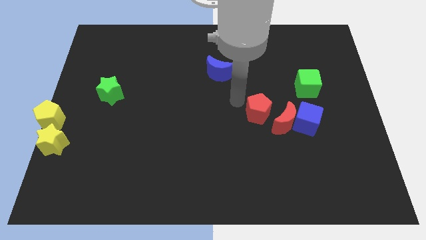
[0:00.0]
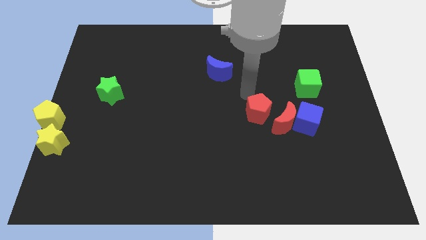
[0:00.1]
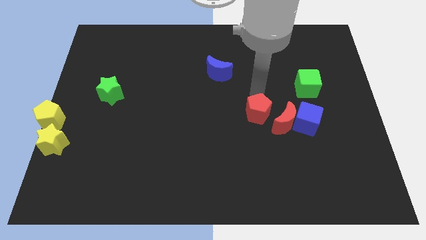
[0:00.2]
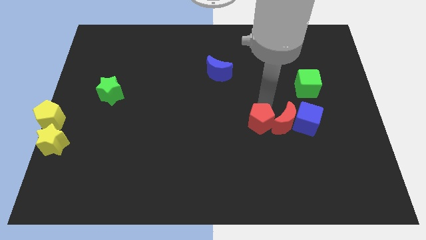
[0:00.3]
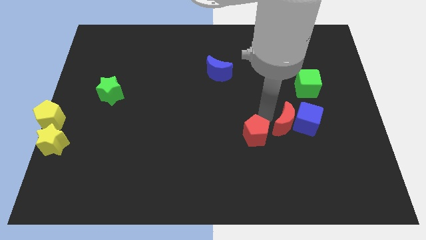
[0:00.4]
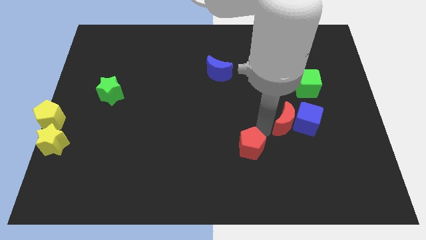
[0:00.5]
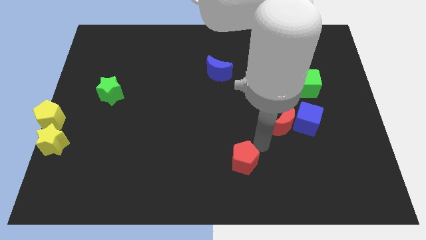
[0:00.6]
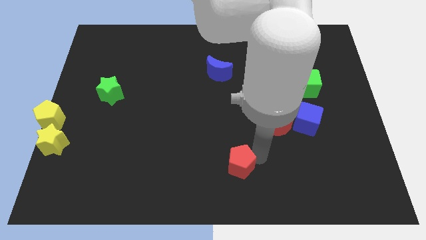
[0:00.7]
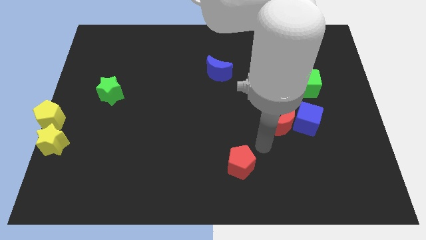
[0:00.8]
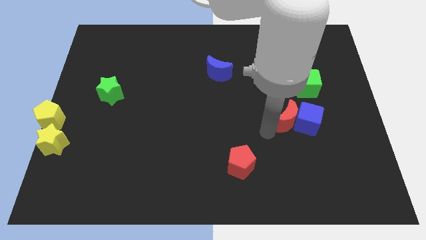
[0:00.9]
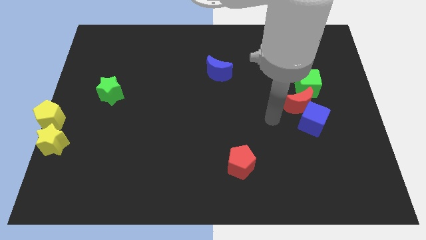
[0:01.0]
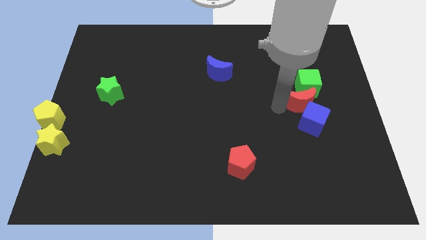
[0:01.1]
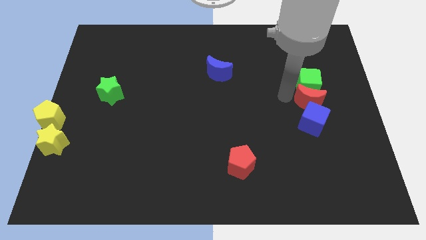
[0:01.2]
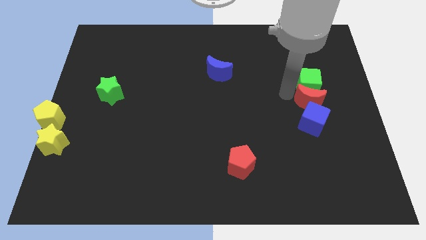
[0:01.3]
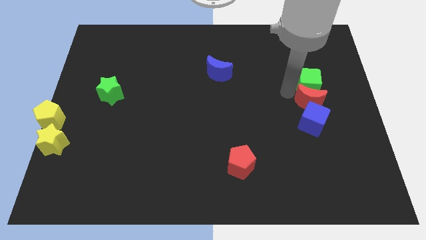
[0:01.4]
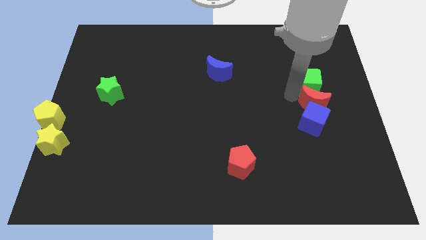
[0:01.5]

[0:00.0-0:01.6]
push red pentagon towards the bottom center

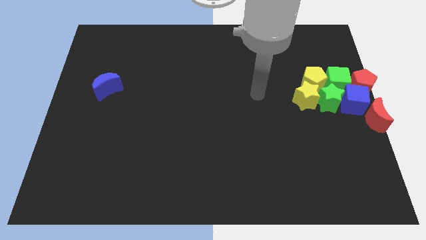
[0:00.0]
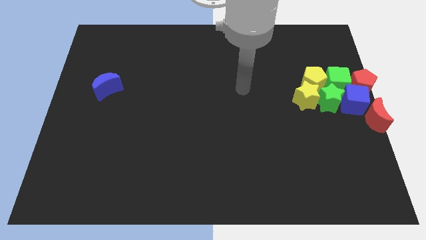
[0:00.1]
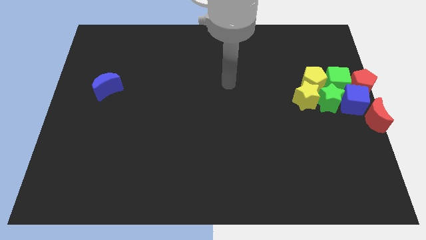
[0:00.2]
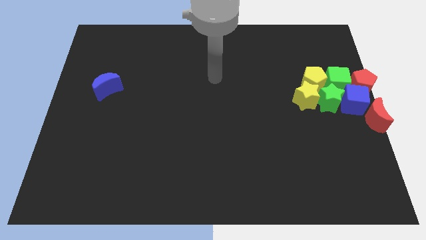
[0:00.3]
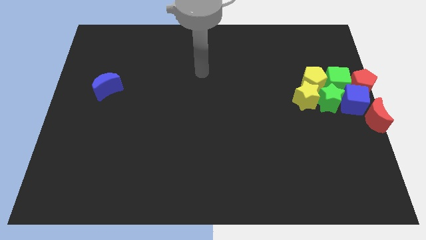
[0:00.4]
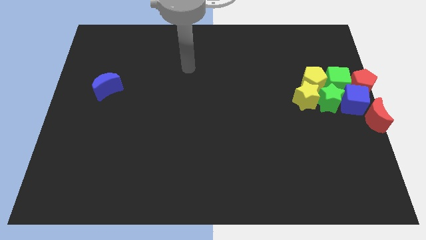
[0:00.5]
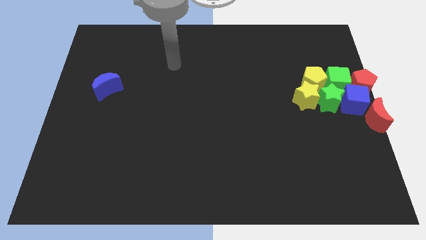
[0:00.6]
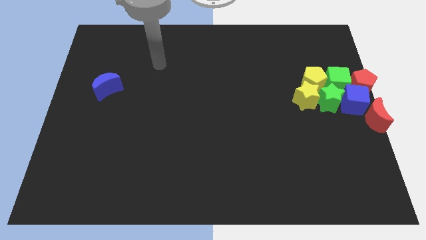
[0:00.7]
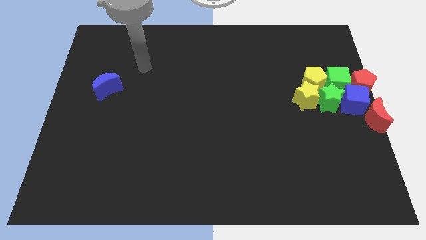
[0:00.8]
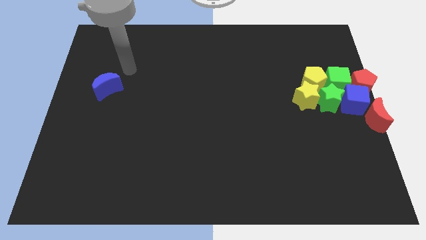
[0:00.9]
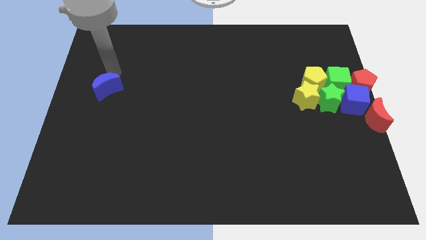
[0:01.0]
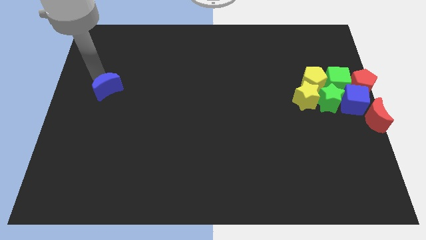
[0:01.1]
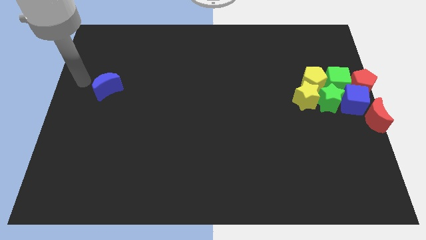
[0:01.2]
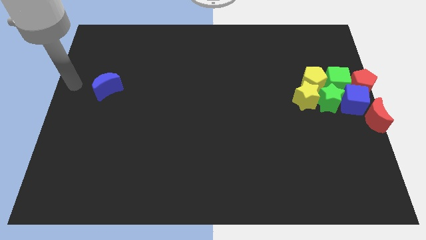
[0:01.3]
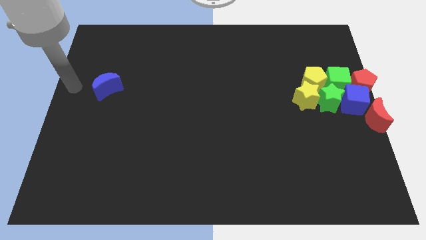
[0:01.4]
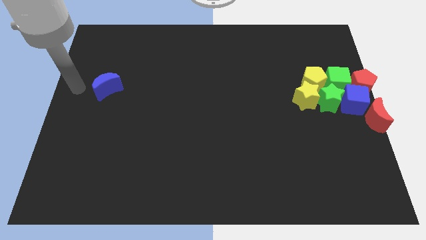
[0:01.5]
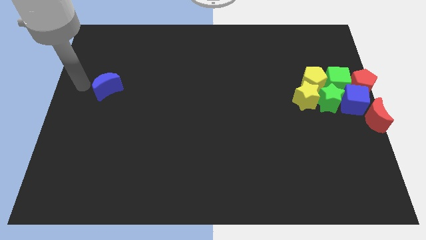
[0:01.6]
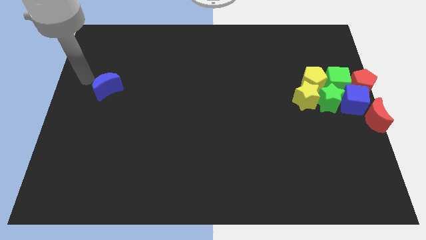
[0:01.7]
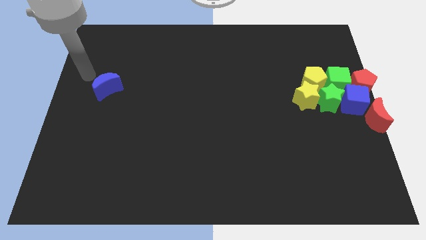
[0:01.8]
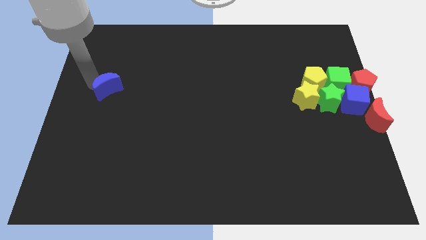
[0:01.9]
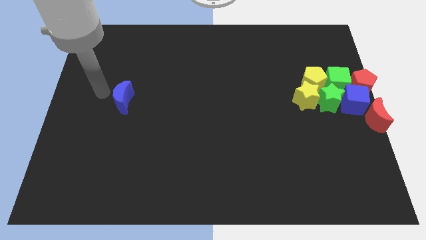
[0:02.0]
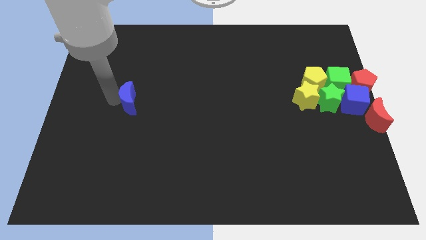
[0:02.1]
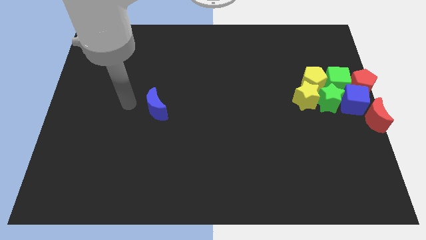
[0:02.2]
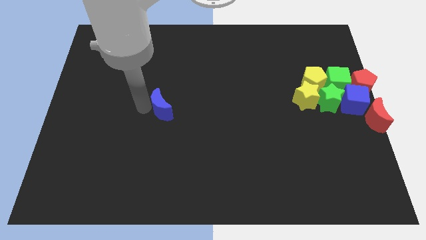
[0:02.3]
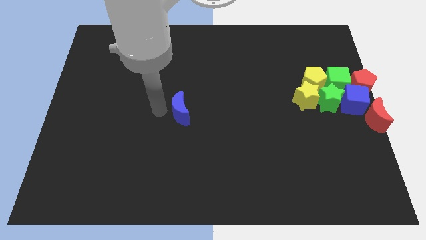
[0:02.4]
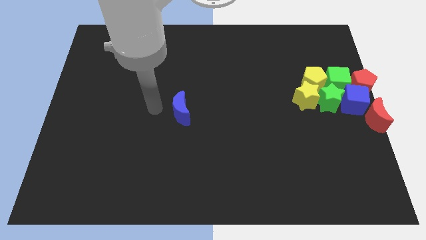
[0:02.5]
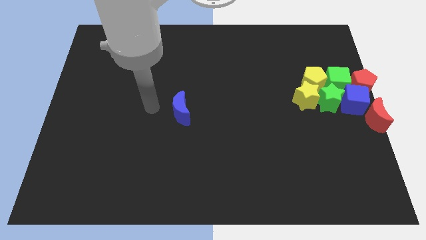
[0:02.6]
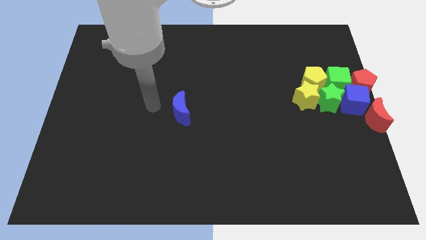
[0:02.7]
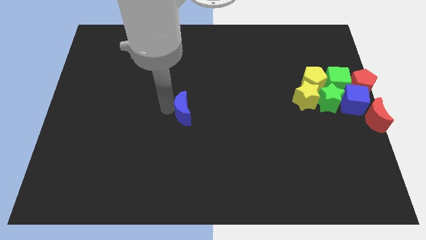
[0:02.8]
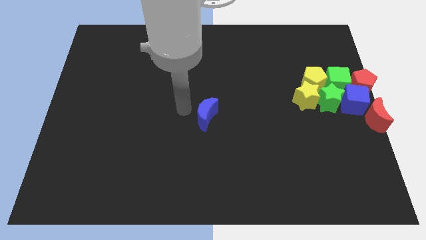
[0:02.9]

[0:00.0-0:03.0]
move the blue crescent to the center of the board

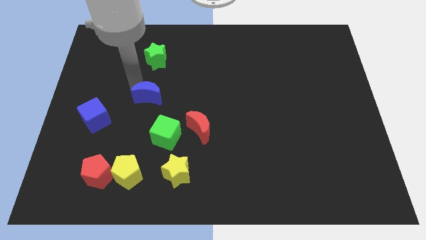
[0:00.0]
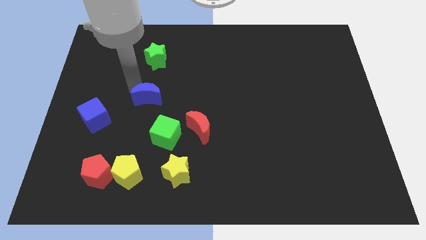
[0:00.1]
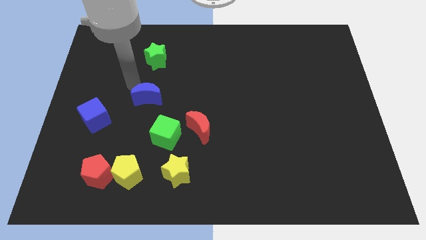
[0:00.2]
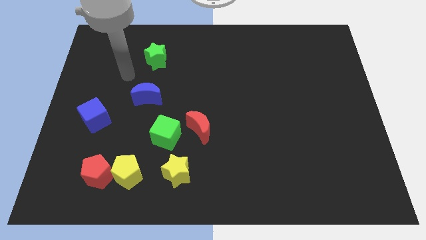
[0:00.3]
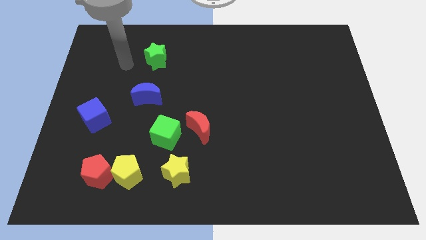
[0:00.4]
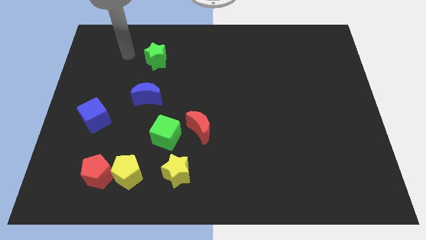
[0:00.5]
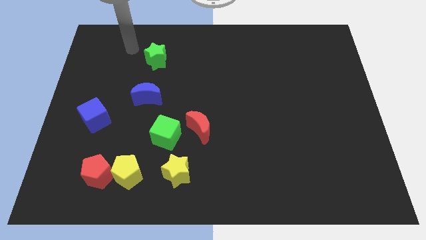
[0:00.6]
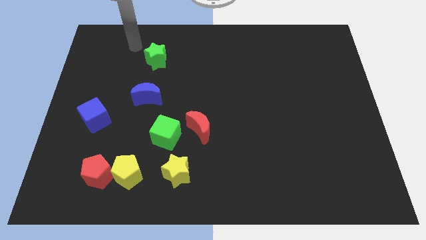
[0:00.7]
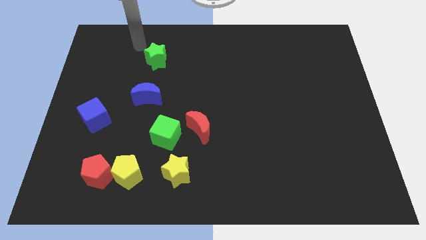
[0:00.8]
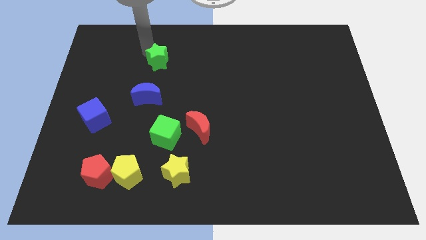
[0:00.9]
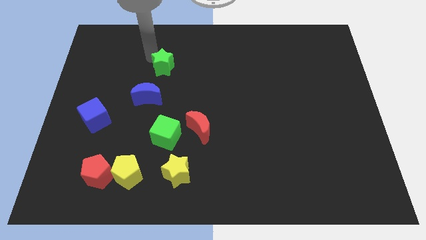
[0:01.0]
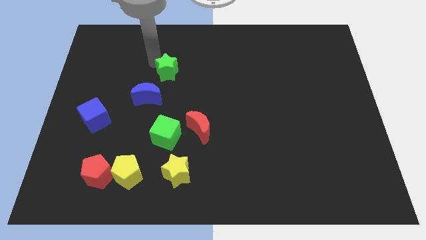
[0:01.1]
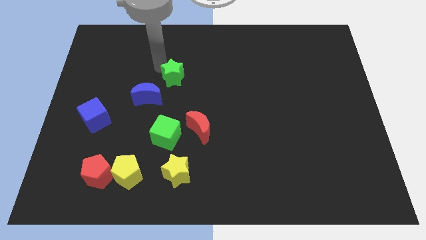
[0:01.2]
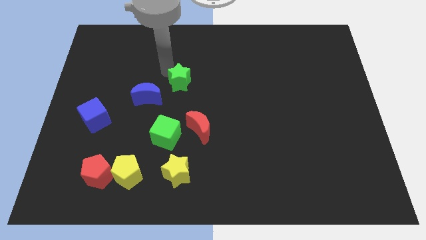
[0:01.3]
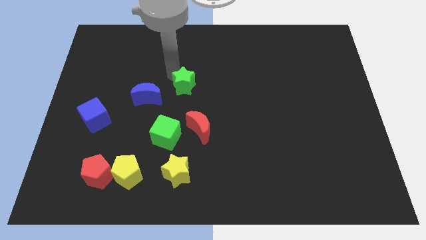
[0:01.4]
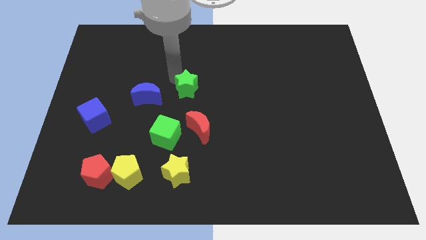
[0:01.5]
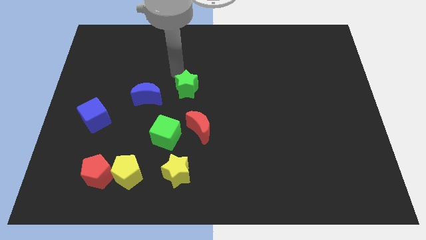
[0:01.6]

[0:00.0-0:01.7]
move the green star right to the blue crescent

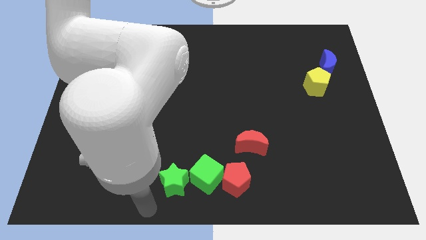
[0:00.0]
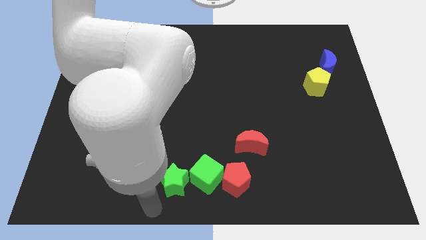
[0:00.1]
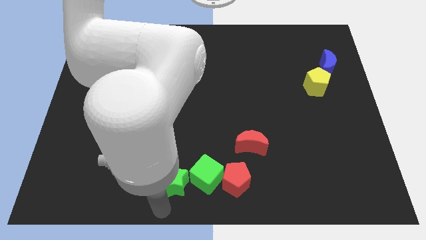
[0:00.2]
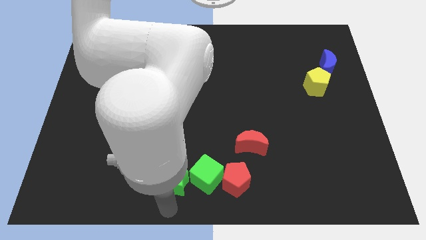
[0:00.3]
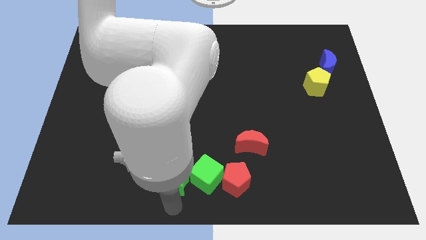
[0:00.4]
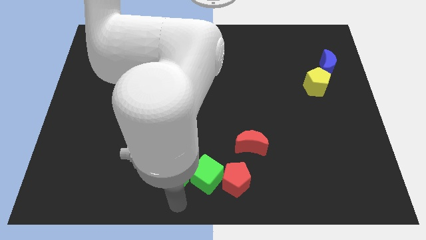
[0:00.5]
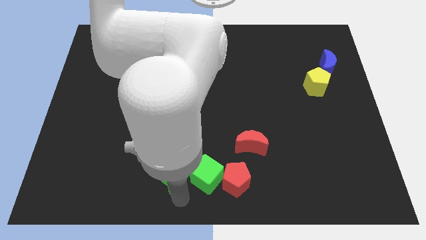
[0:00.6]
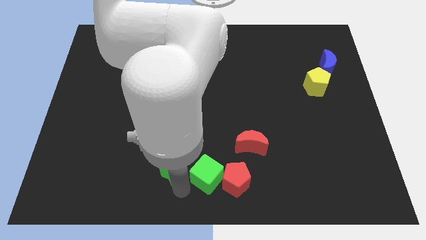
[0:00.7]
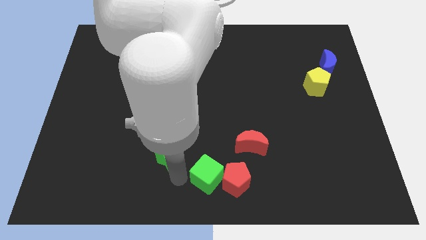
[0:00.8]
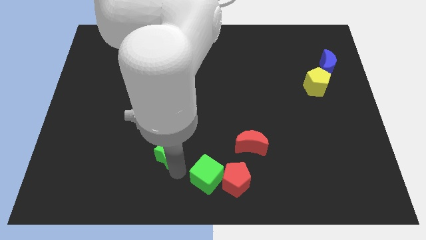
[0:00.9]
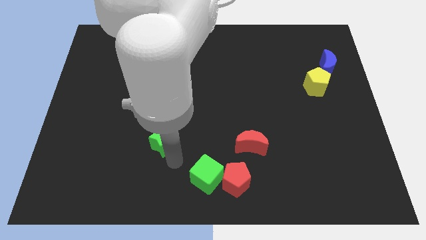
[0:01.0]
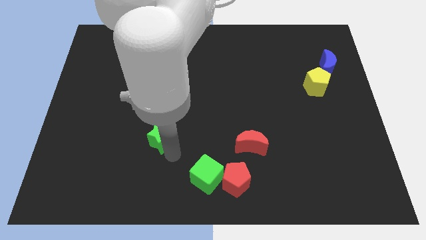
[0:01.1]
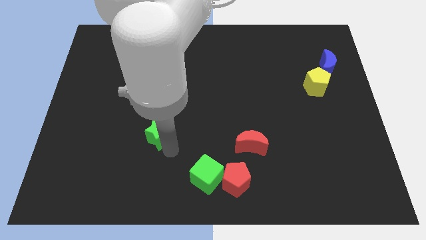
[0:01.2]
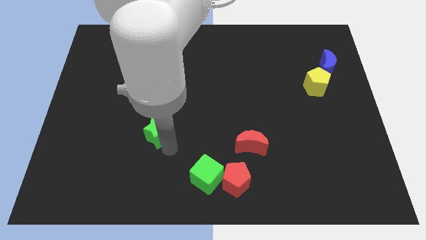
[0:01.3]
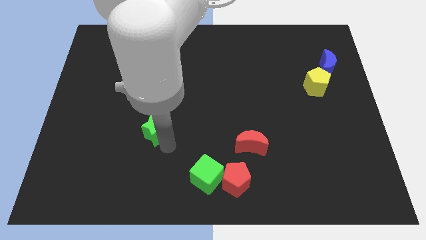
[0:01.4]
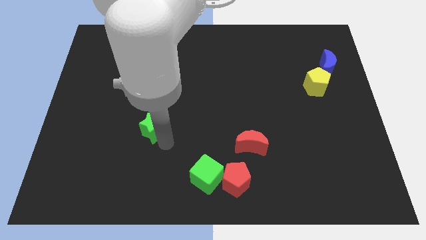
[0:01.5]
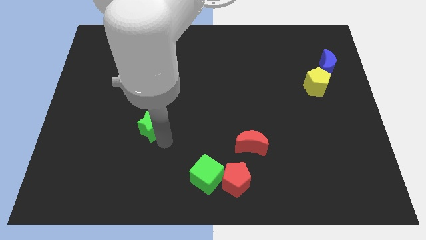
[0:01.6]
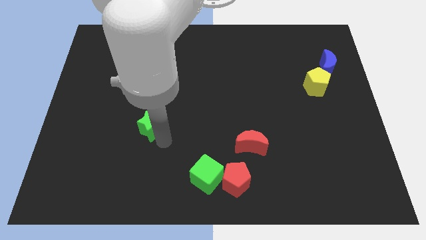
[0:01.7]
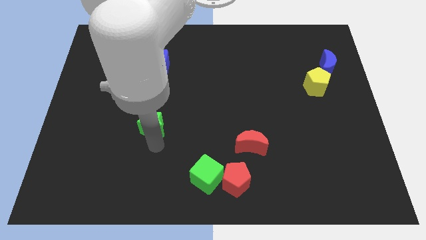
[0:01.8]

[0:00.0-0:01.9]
push the green star towards the left center of the board

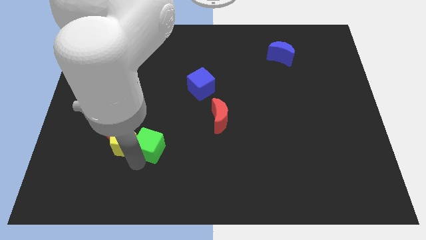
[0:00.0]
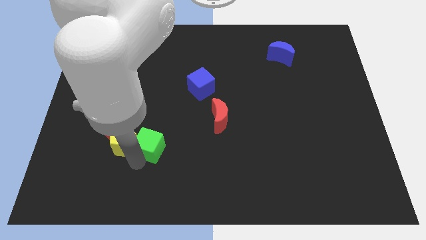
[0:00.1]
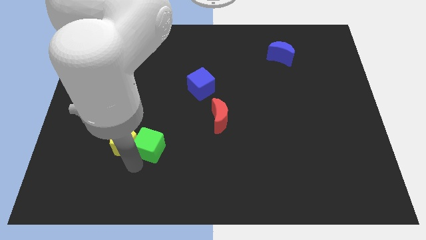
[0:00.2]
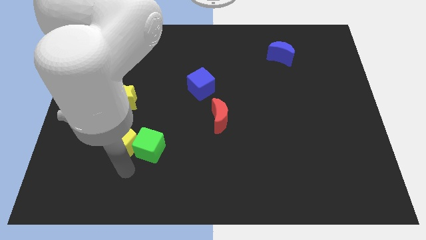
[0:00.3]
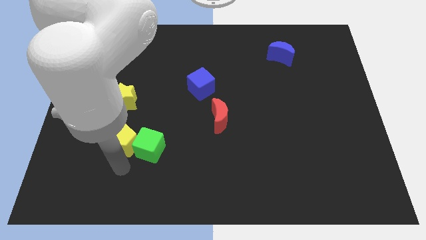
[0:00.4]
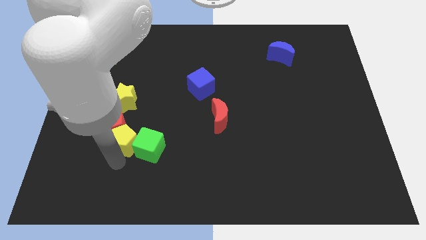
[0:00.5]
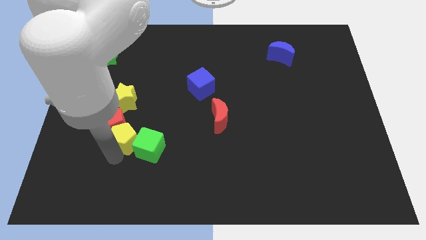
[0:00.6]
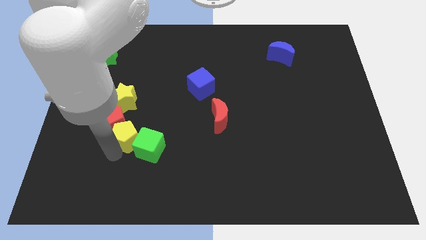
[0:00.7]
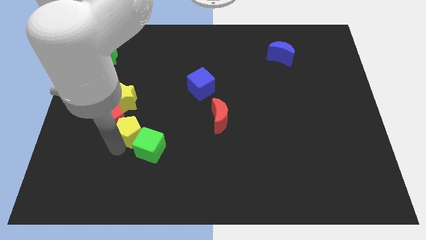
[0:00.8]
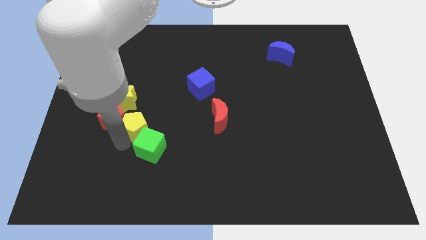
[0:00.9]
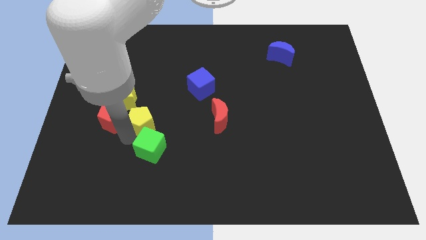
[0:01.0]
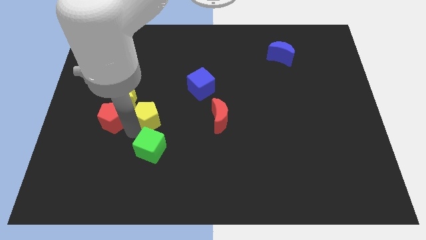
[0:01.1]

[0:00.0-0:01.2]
move your arm away from the green cube
